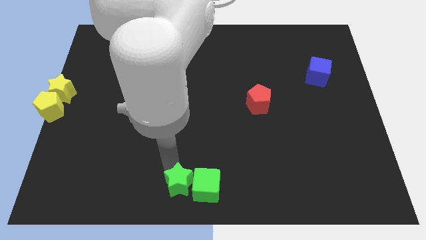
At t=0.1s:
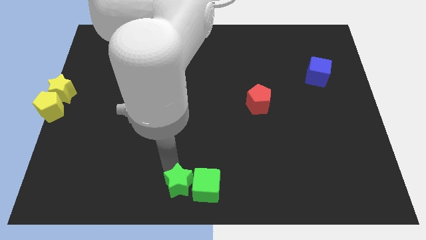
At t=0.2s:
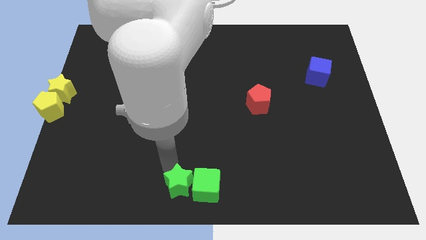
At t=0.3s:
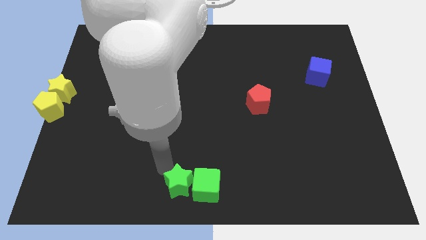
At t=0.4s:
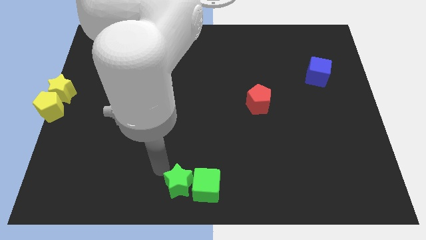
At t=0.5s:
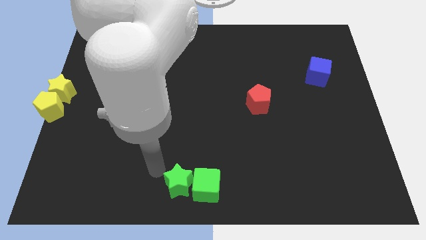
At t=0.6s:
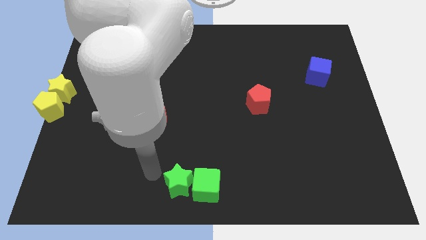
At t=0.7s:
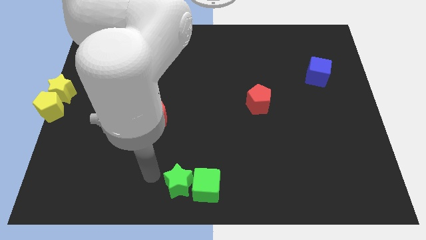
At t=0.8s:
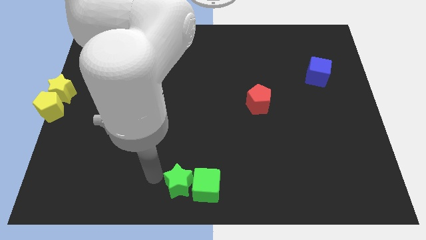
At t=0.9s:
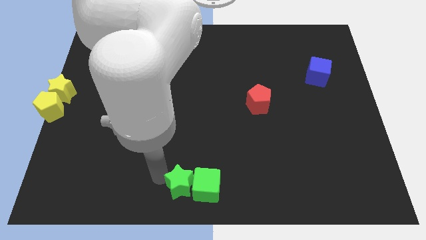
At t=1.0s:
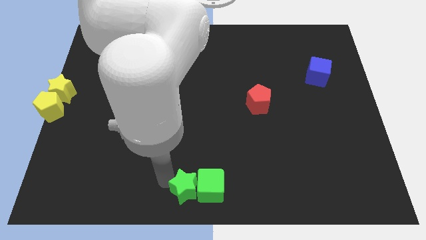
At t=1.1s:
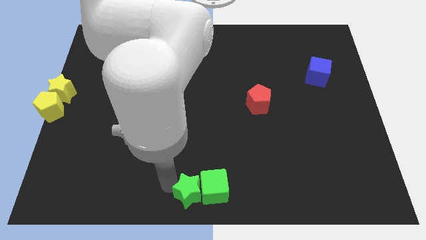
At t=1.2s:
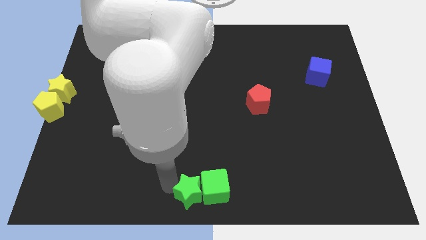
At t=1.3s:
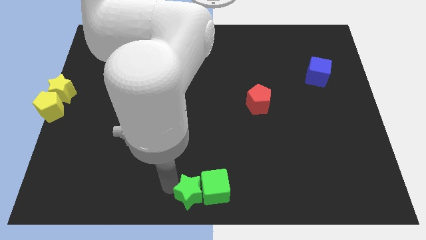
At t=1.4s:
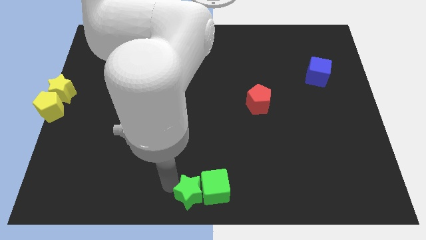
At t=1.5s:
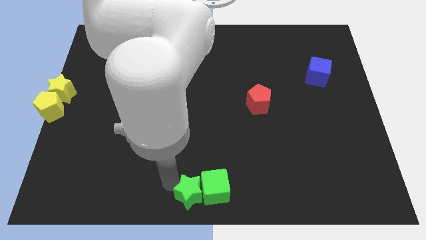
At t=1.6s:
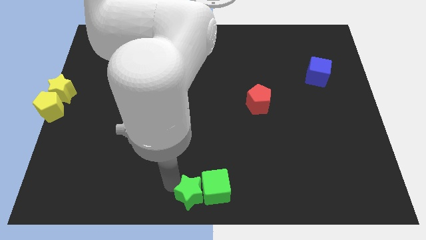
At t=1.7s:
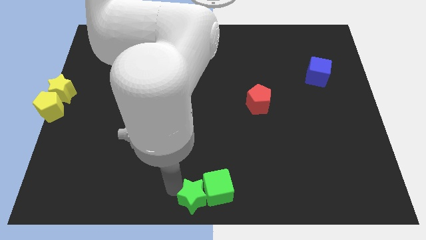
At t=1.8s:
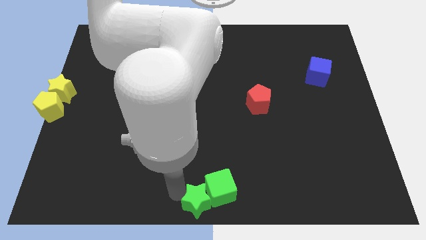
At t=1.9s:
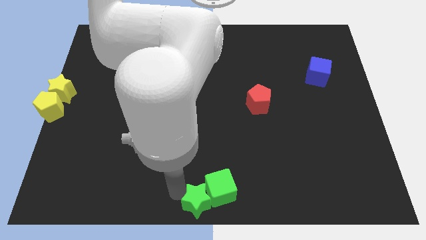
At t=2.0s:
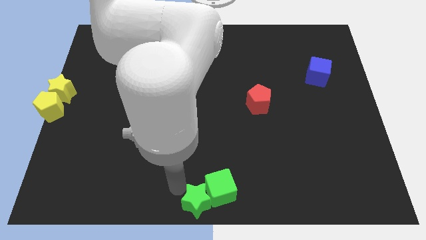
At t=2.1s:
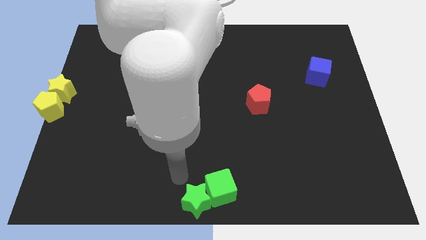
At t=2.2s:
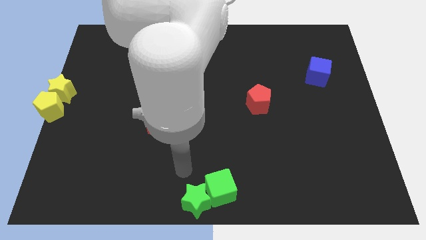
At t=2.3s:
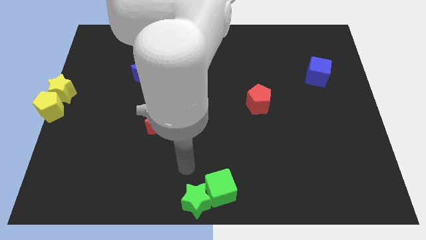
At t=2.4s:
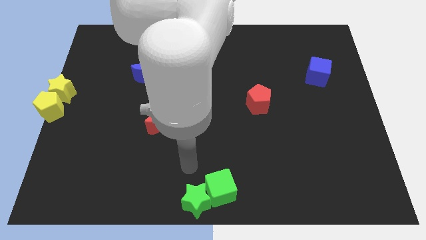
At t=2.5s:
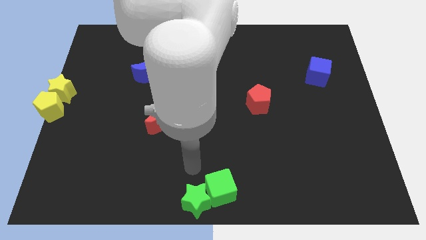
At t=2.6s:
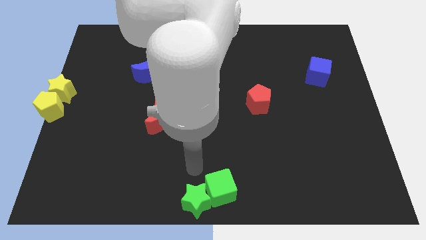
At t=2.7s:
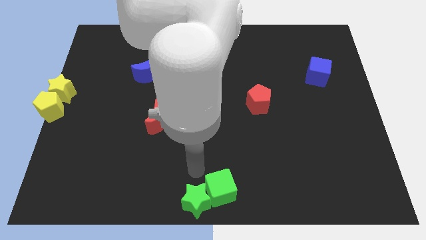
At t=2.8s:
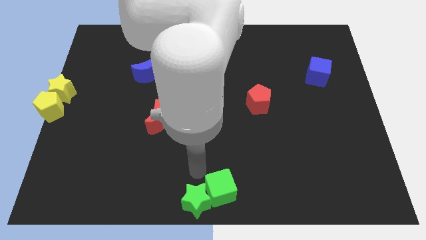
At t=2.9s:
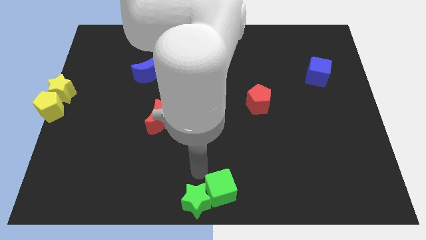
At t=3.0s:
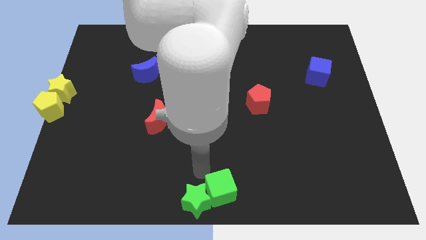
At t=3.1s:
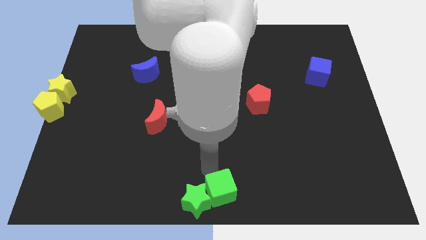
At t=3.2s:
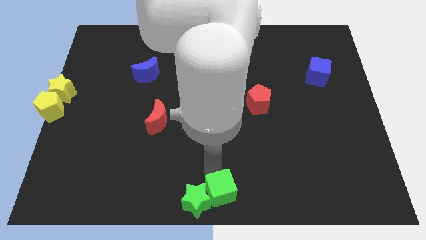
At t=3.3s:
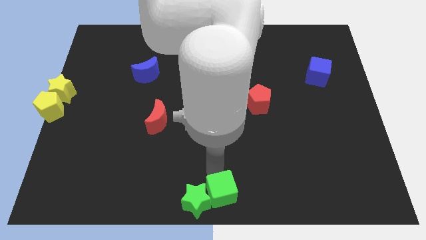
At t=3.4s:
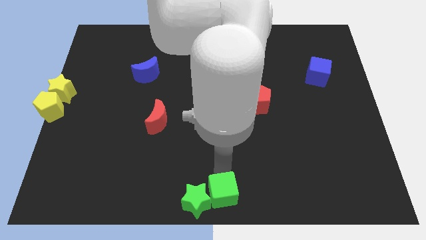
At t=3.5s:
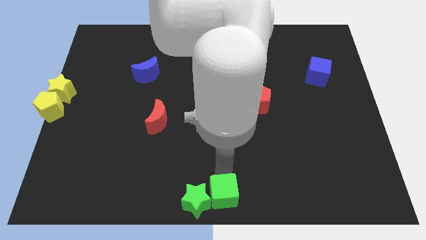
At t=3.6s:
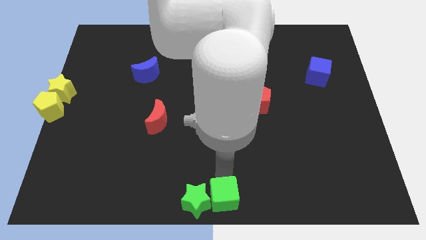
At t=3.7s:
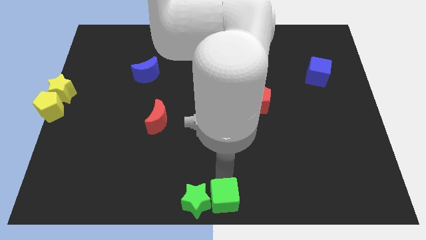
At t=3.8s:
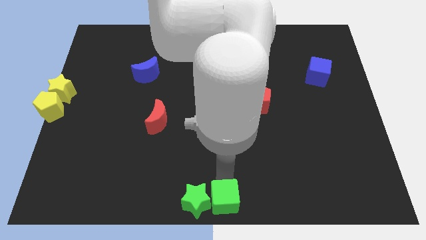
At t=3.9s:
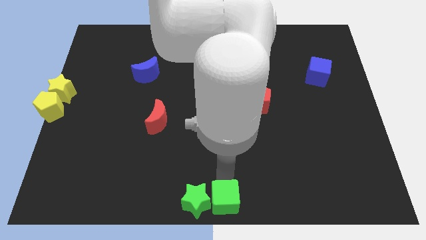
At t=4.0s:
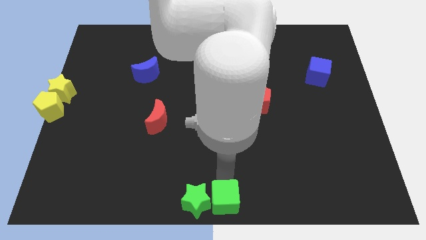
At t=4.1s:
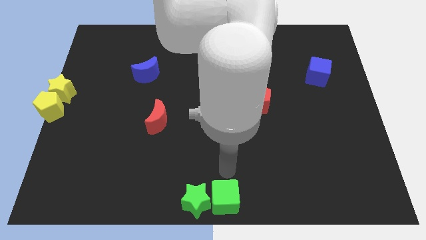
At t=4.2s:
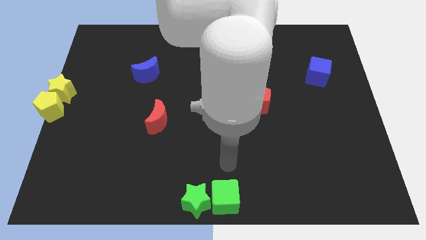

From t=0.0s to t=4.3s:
place the green objects at the bottom center of the table

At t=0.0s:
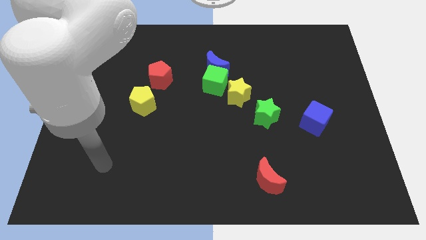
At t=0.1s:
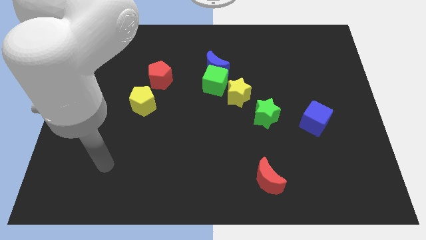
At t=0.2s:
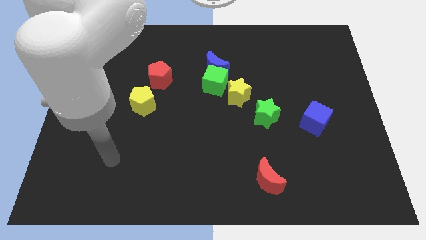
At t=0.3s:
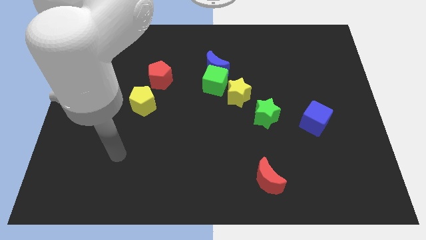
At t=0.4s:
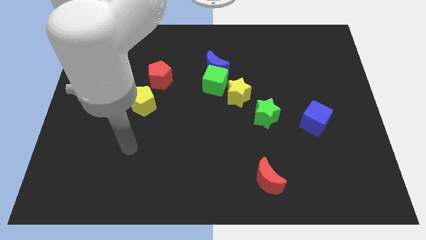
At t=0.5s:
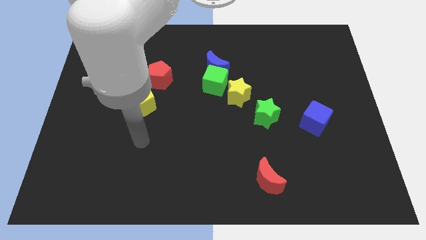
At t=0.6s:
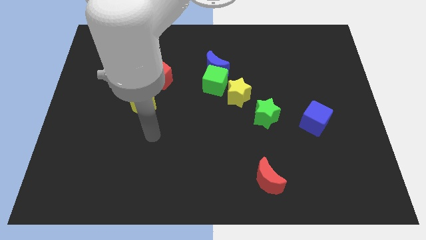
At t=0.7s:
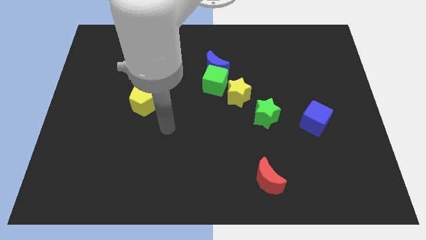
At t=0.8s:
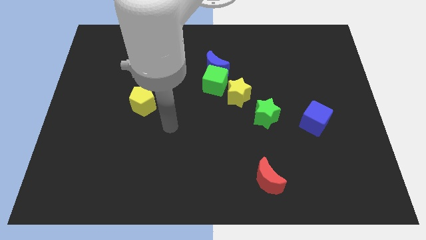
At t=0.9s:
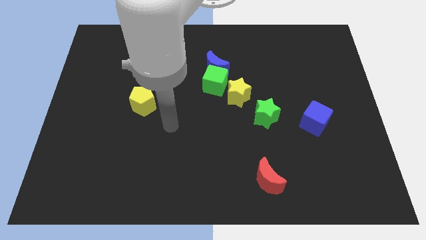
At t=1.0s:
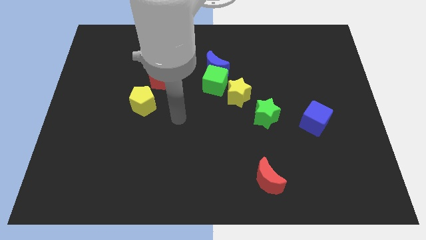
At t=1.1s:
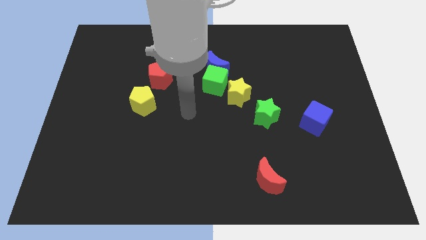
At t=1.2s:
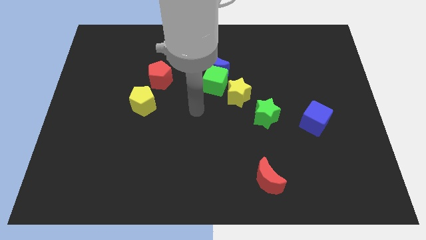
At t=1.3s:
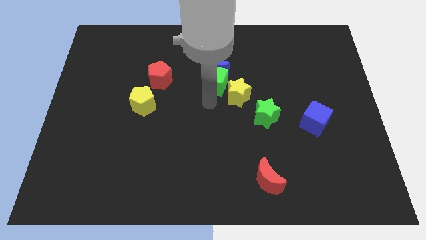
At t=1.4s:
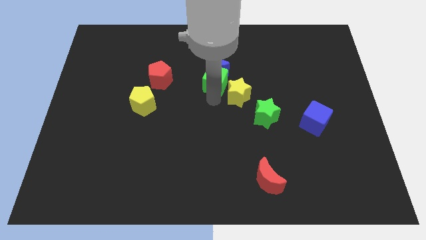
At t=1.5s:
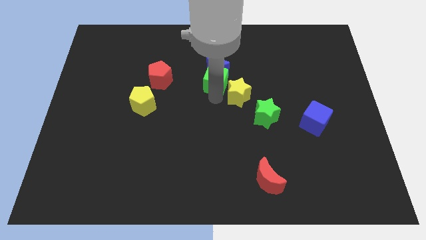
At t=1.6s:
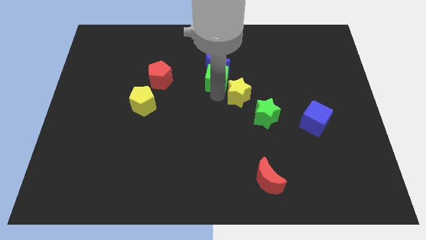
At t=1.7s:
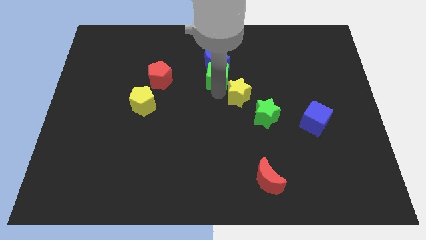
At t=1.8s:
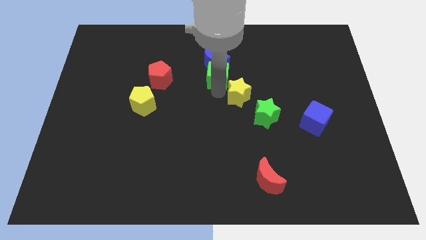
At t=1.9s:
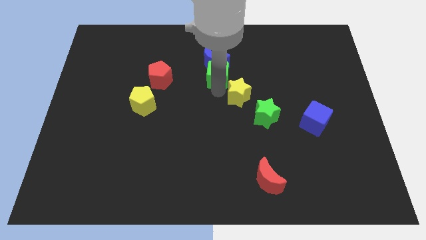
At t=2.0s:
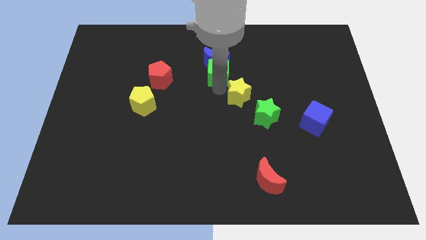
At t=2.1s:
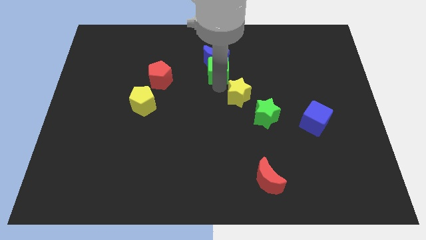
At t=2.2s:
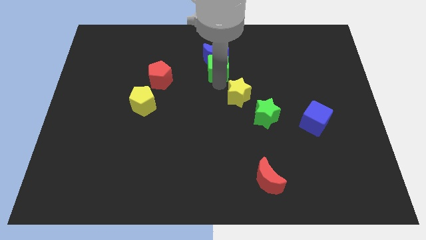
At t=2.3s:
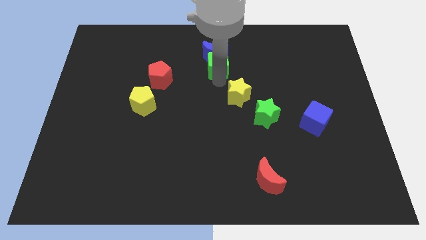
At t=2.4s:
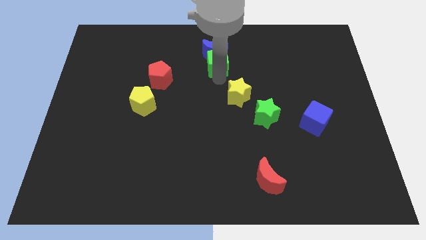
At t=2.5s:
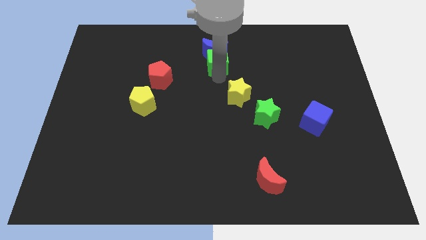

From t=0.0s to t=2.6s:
slightly push the green cube along with the blue moon towards up

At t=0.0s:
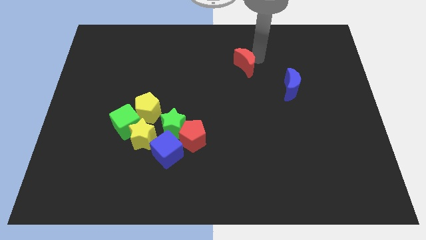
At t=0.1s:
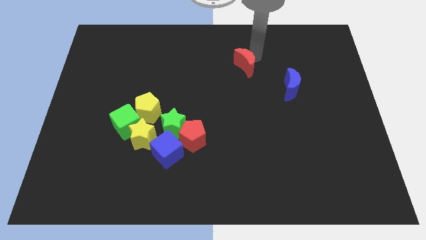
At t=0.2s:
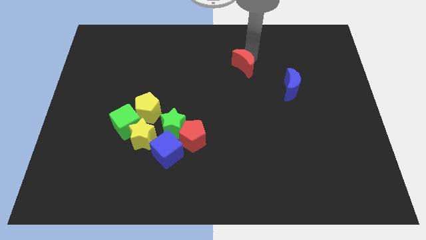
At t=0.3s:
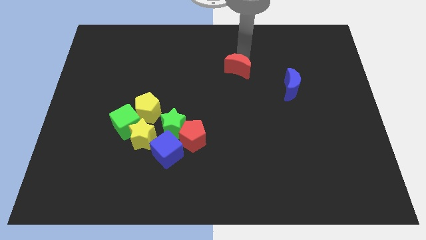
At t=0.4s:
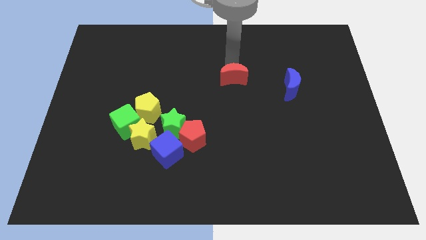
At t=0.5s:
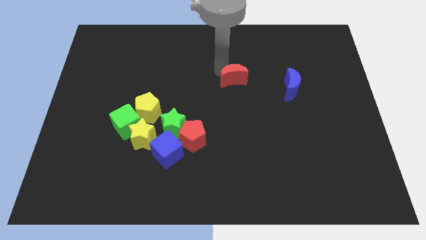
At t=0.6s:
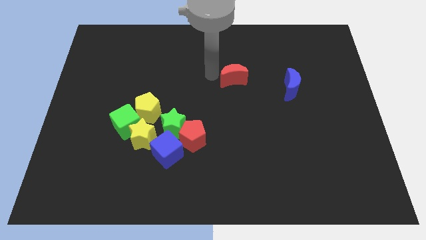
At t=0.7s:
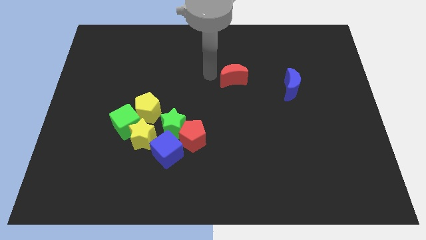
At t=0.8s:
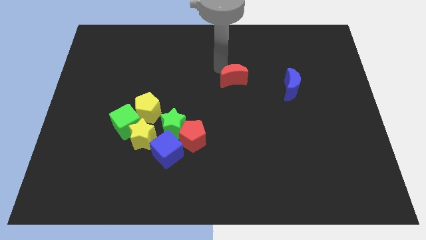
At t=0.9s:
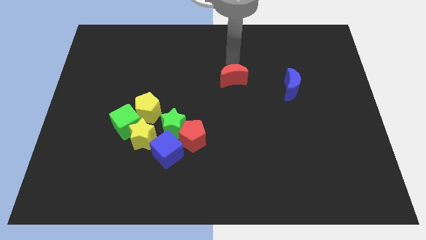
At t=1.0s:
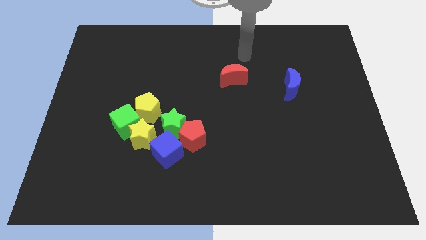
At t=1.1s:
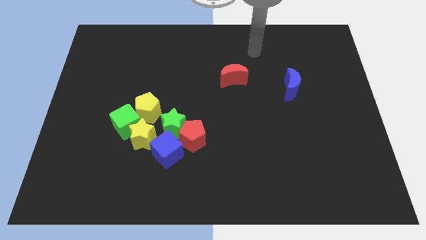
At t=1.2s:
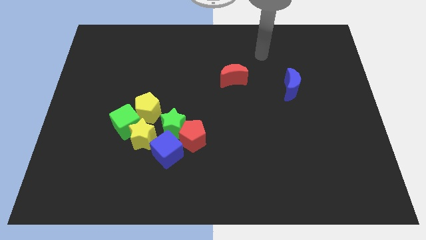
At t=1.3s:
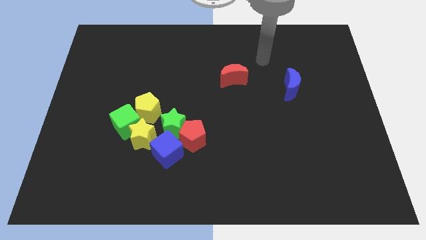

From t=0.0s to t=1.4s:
slide the red moon to the center

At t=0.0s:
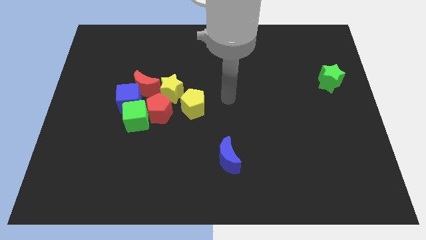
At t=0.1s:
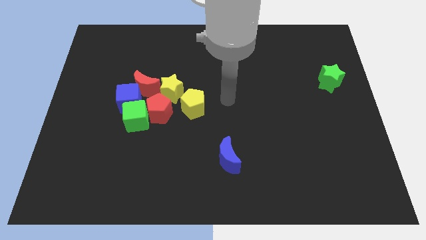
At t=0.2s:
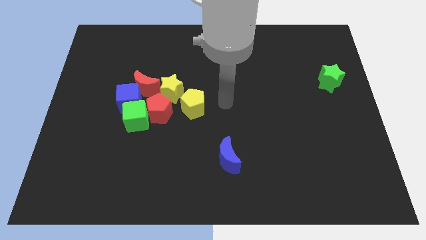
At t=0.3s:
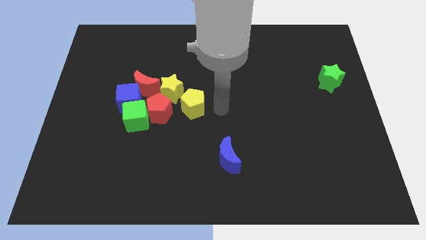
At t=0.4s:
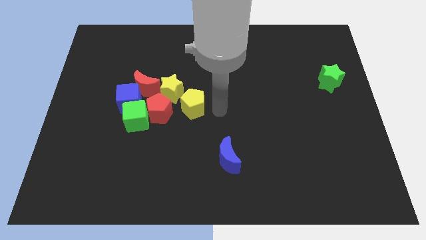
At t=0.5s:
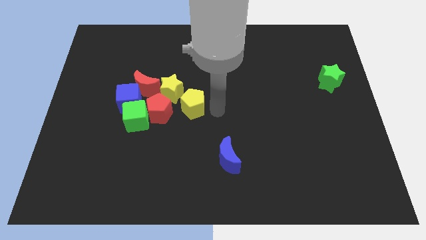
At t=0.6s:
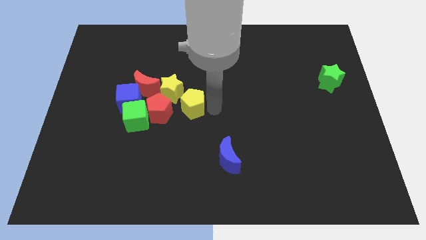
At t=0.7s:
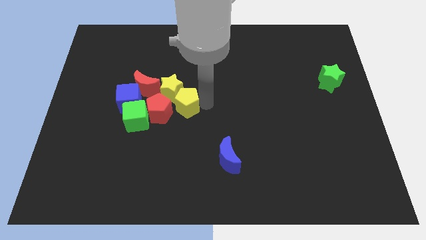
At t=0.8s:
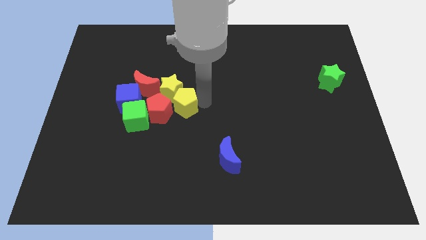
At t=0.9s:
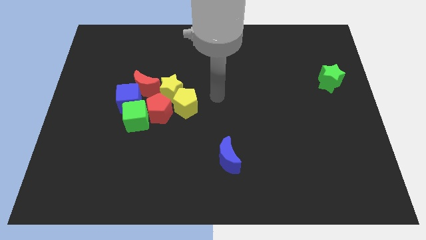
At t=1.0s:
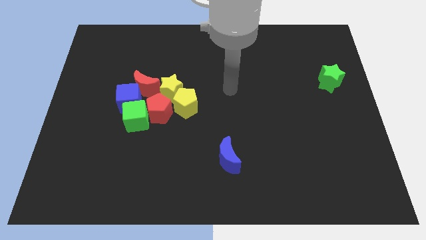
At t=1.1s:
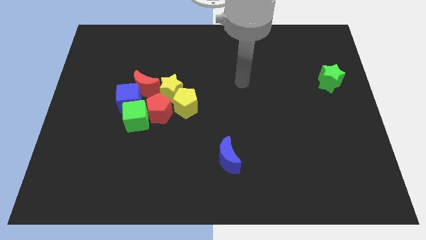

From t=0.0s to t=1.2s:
push the yellow pentagon into the yellow star
